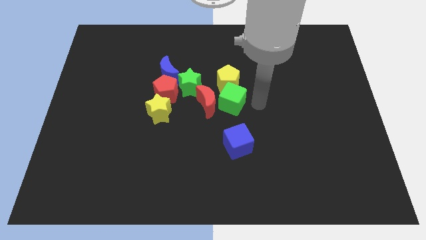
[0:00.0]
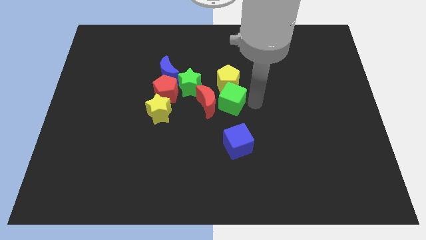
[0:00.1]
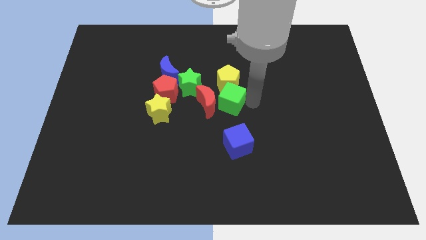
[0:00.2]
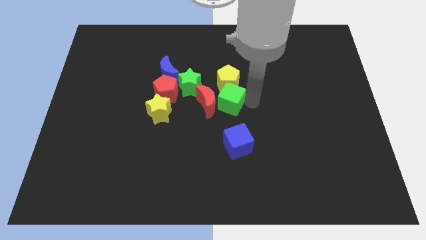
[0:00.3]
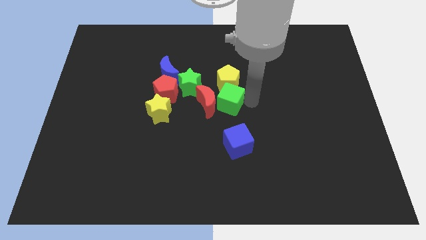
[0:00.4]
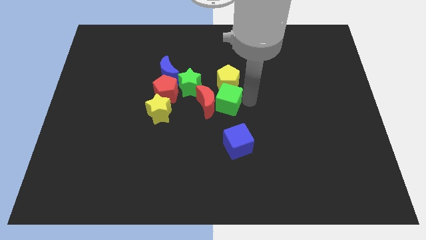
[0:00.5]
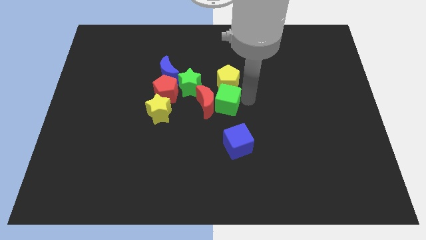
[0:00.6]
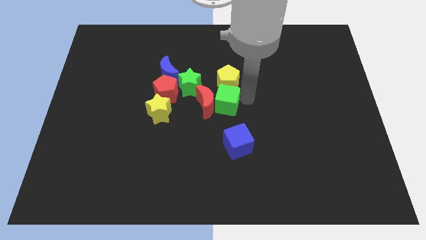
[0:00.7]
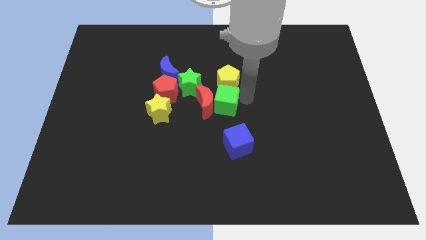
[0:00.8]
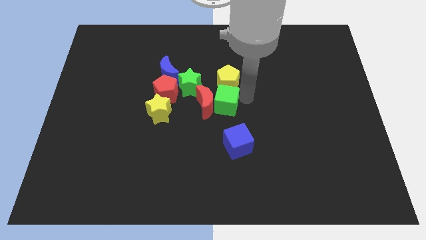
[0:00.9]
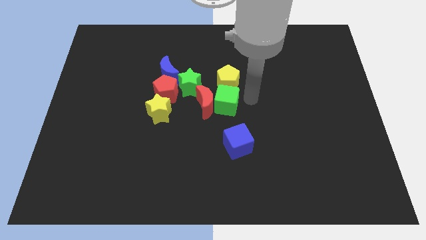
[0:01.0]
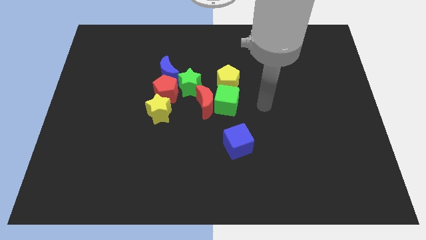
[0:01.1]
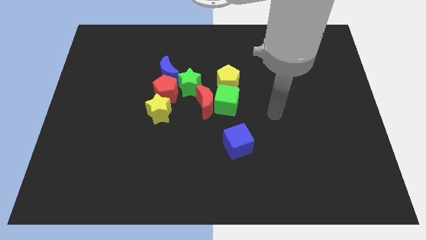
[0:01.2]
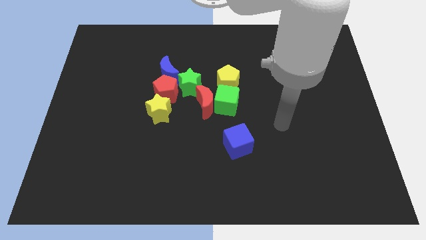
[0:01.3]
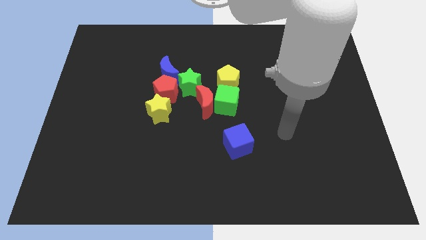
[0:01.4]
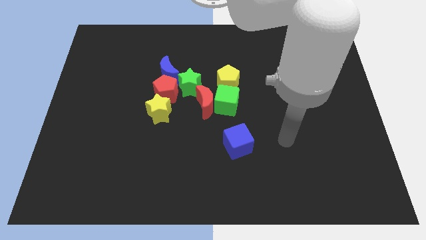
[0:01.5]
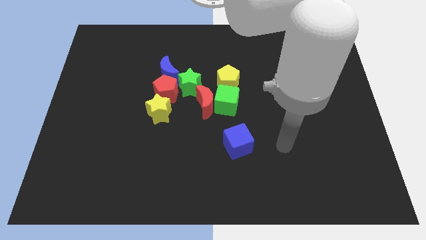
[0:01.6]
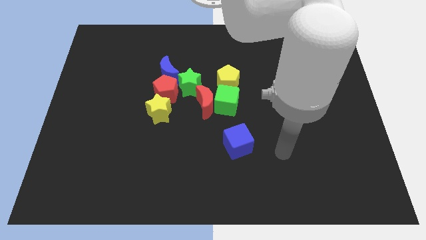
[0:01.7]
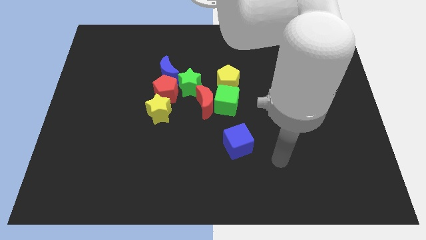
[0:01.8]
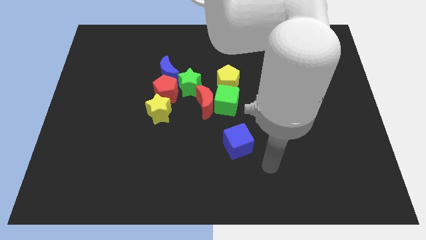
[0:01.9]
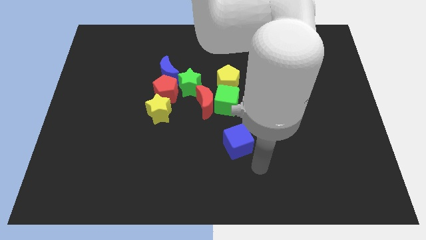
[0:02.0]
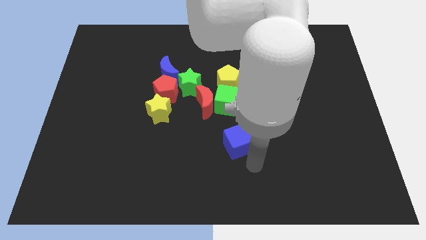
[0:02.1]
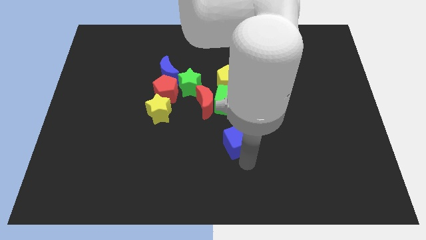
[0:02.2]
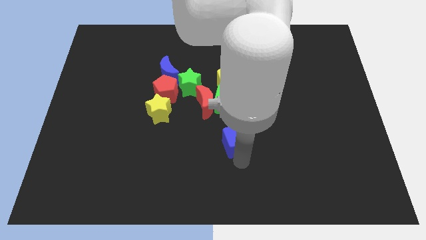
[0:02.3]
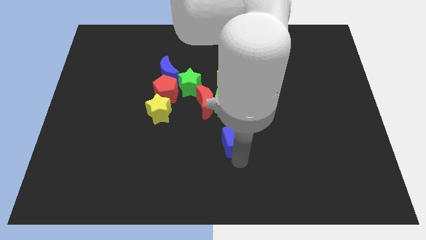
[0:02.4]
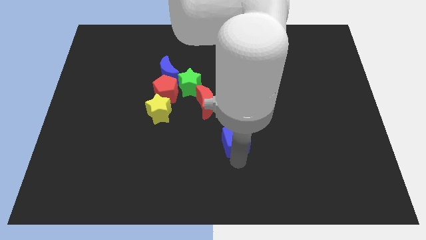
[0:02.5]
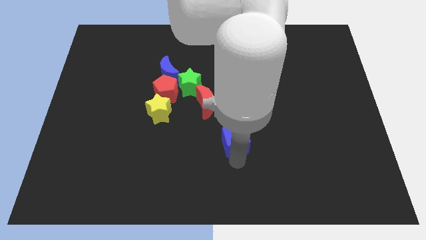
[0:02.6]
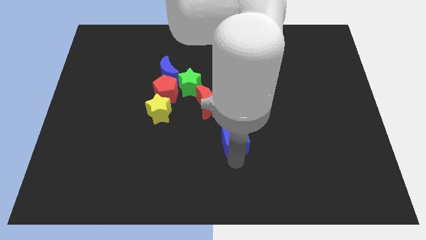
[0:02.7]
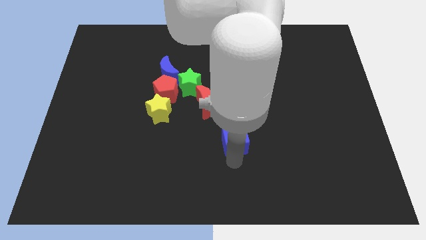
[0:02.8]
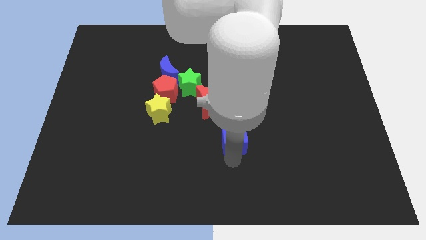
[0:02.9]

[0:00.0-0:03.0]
touch the bottom of the blue cube

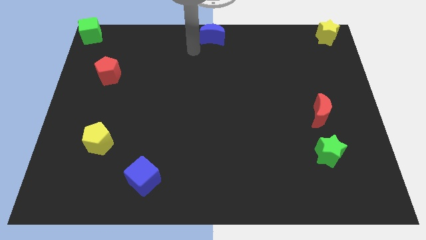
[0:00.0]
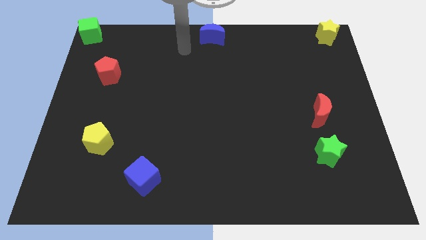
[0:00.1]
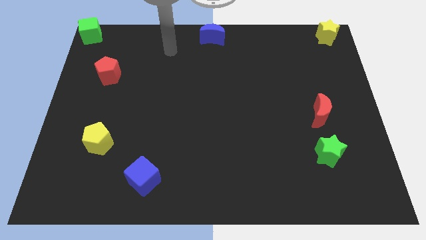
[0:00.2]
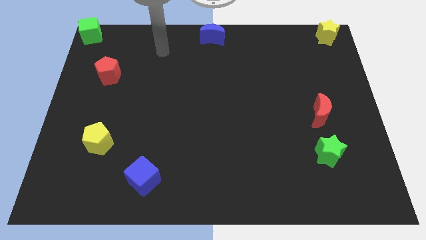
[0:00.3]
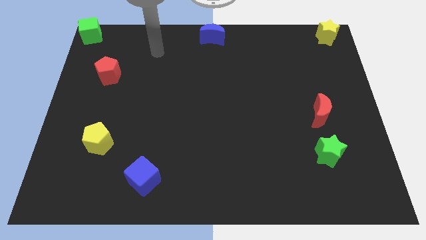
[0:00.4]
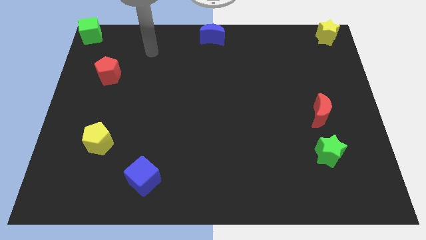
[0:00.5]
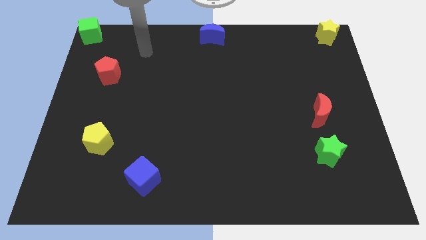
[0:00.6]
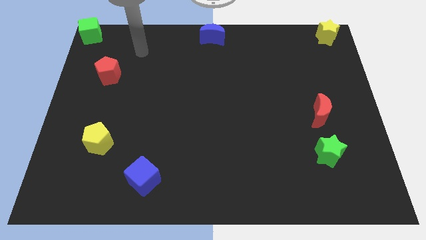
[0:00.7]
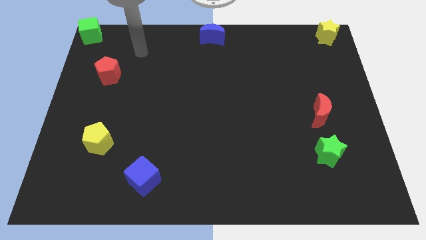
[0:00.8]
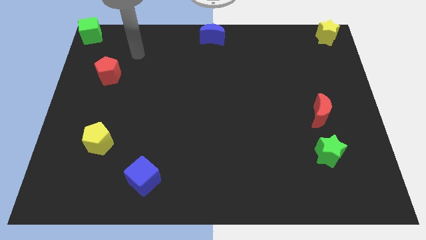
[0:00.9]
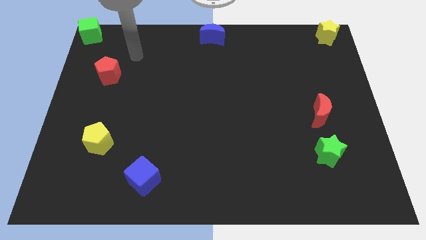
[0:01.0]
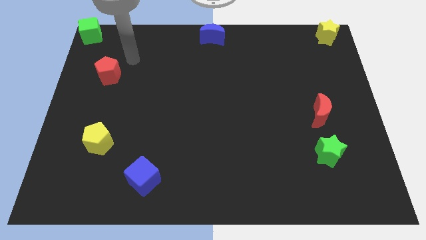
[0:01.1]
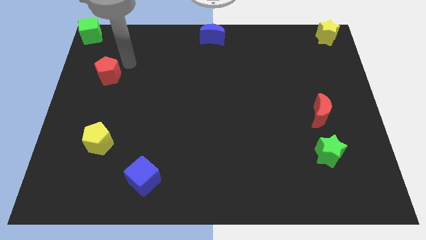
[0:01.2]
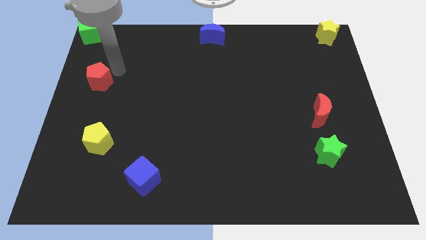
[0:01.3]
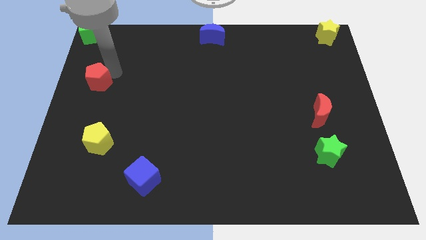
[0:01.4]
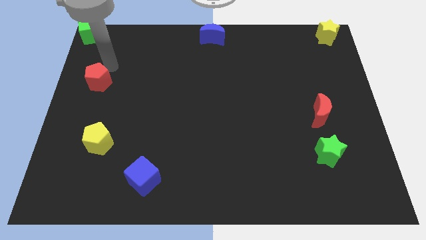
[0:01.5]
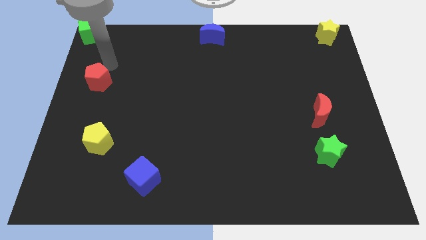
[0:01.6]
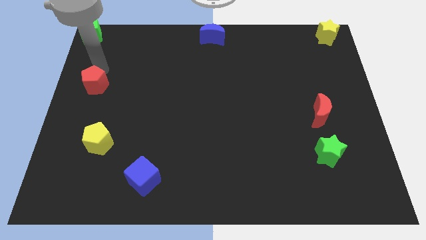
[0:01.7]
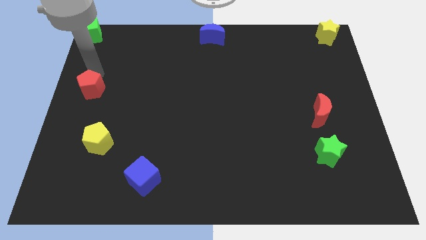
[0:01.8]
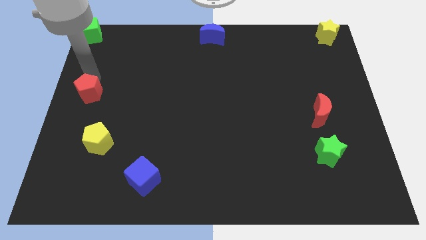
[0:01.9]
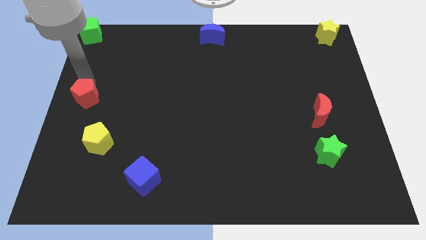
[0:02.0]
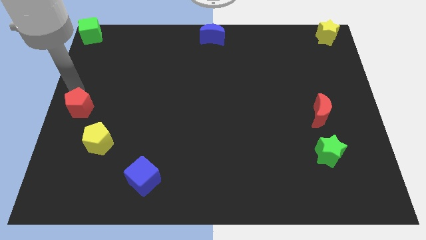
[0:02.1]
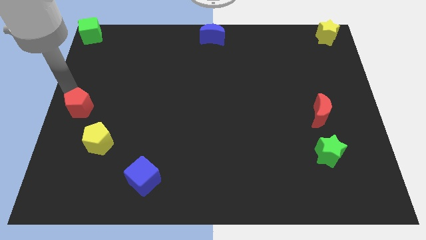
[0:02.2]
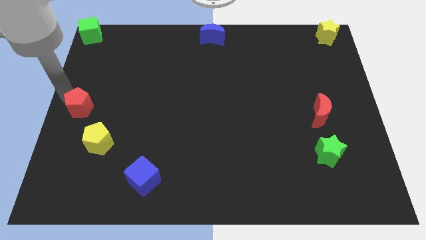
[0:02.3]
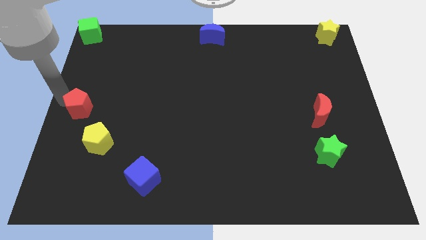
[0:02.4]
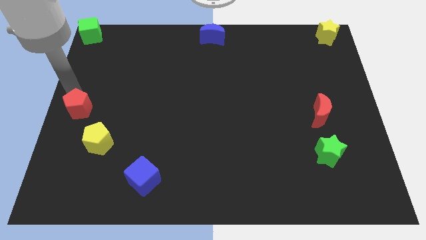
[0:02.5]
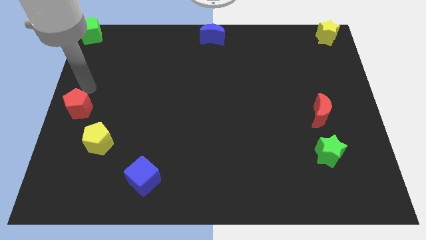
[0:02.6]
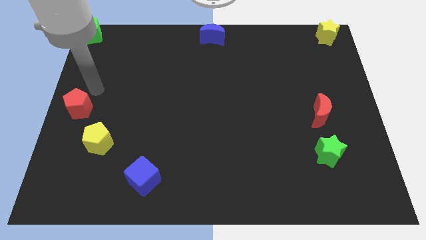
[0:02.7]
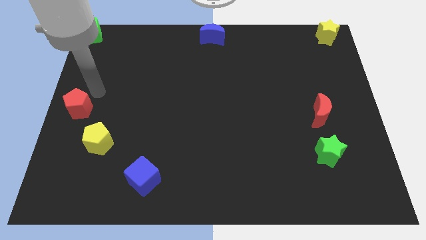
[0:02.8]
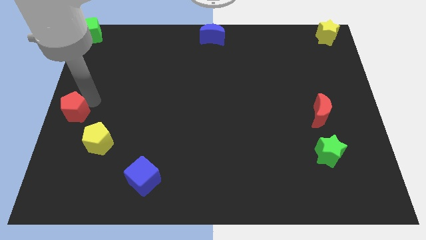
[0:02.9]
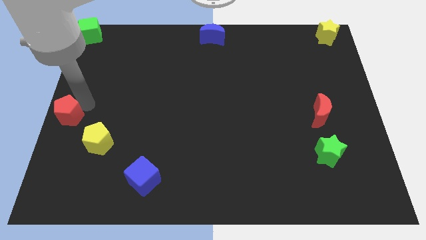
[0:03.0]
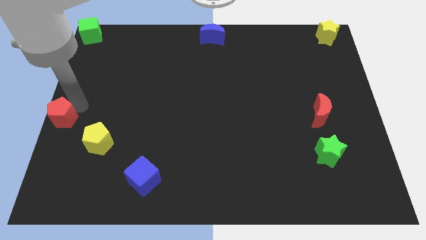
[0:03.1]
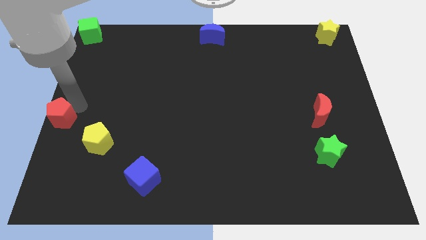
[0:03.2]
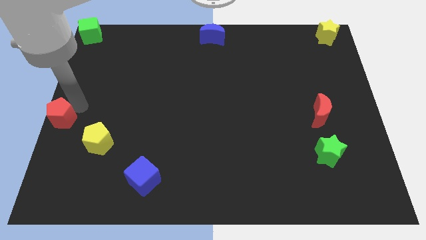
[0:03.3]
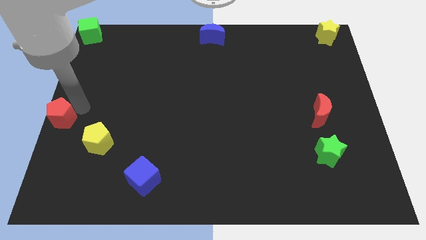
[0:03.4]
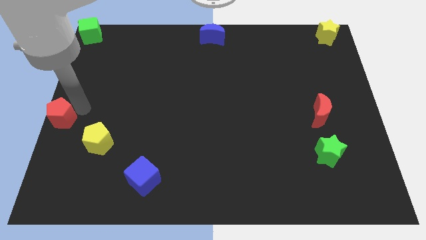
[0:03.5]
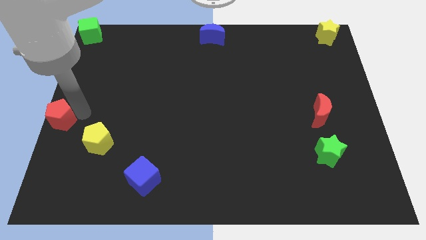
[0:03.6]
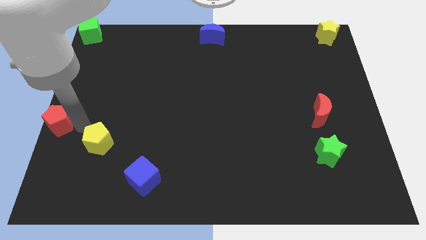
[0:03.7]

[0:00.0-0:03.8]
push red pentagon diagonally below

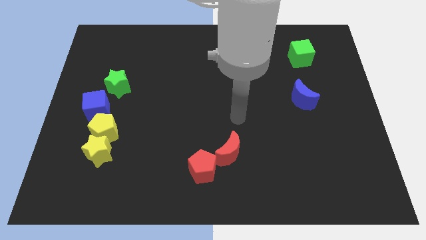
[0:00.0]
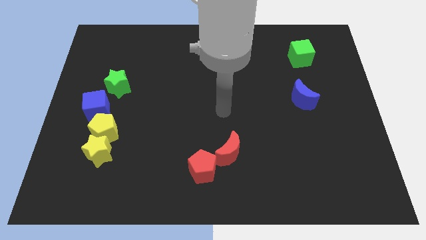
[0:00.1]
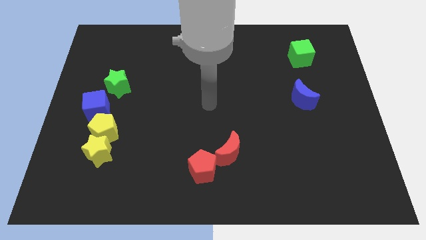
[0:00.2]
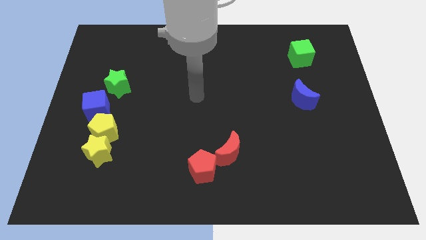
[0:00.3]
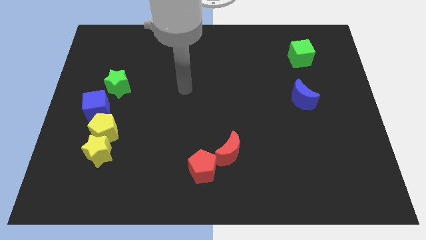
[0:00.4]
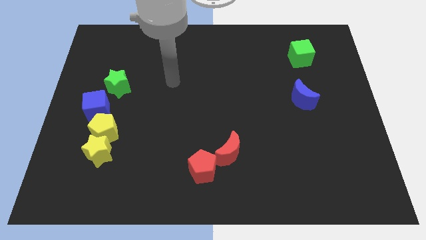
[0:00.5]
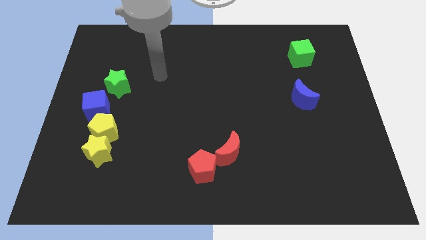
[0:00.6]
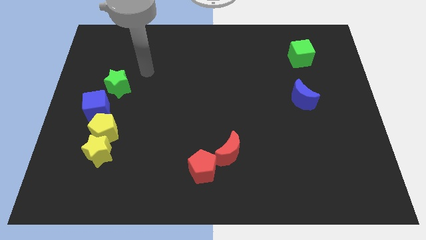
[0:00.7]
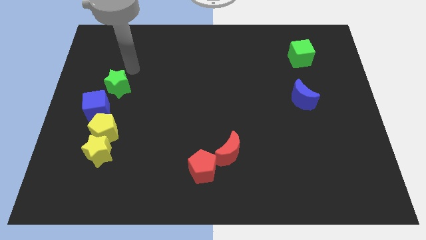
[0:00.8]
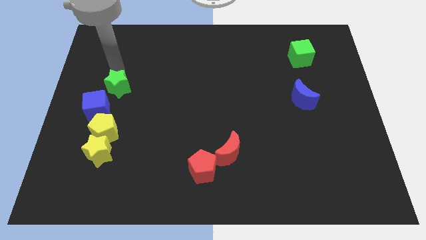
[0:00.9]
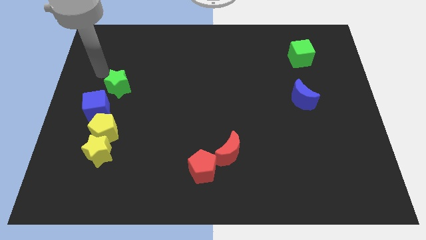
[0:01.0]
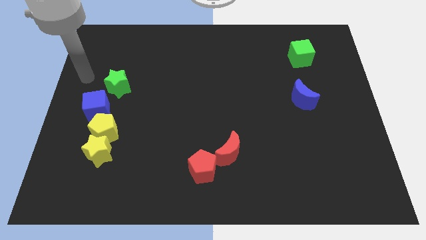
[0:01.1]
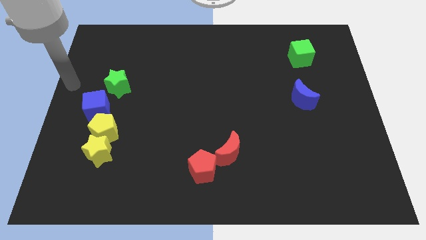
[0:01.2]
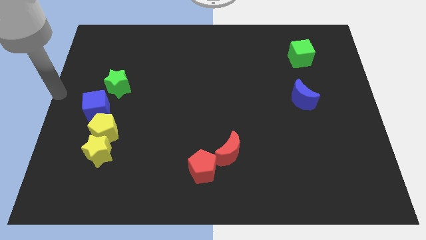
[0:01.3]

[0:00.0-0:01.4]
move your arm to the center left of the board

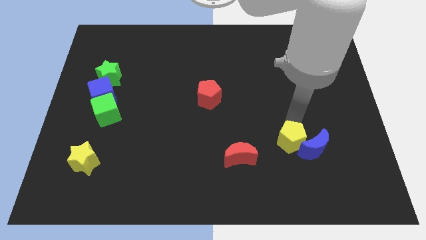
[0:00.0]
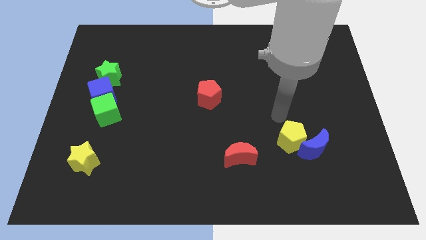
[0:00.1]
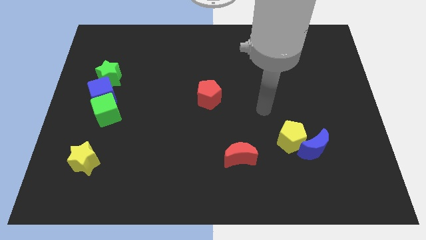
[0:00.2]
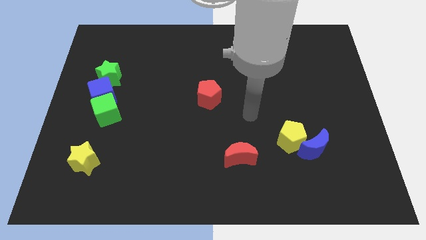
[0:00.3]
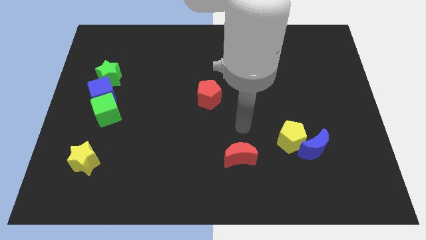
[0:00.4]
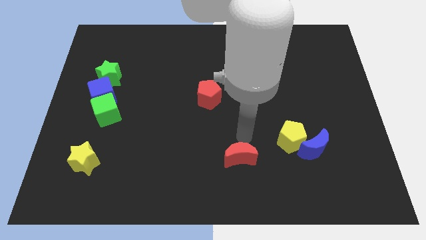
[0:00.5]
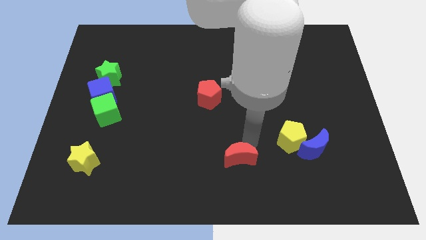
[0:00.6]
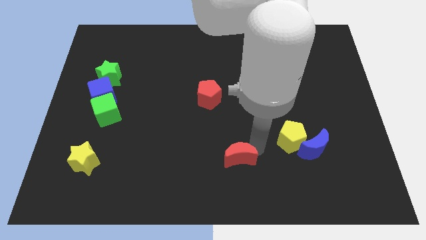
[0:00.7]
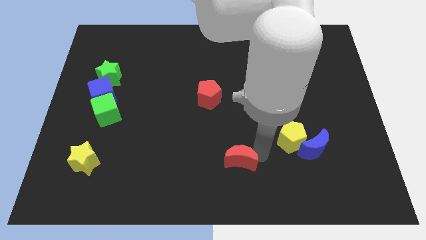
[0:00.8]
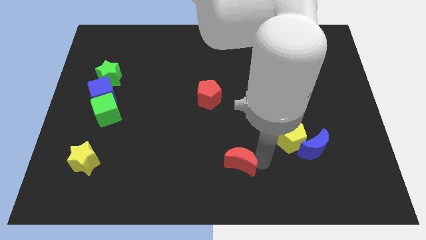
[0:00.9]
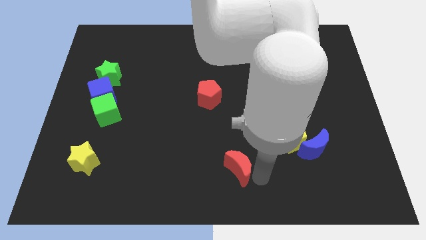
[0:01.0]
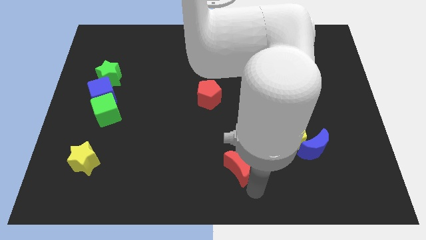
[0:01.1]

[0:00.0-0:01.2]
rotate the red crescent to the left side
